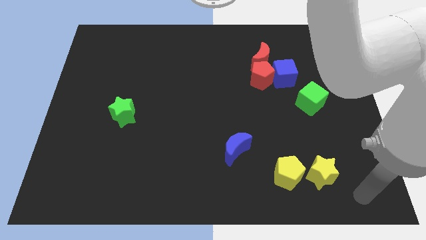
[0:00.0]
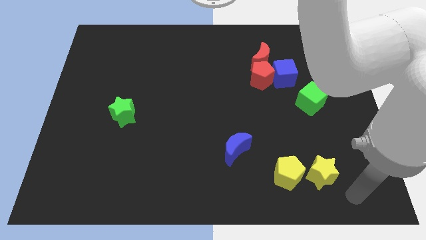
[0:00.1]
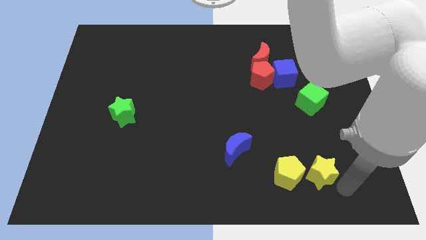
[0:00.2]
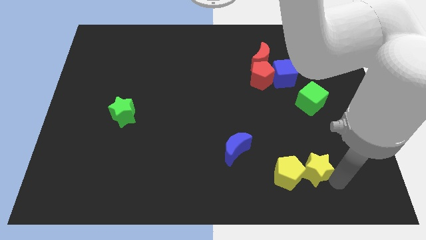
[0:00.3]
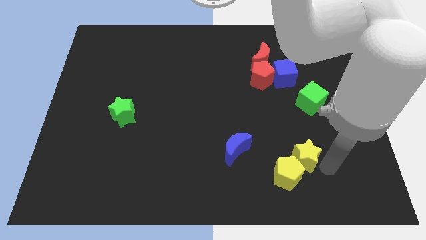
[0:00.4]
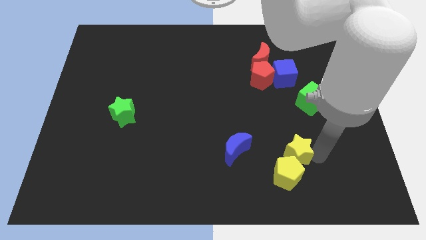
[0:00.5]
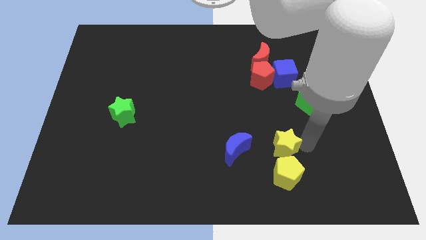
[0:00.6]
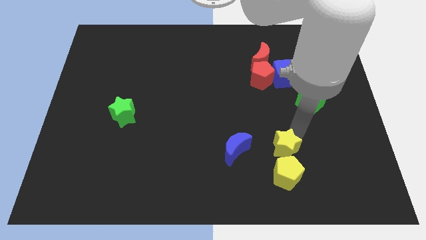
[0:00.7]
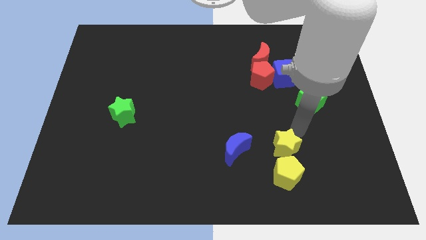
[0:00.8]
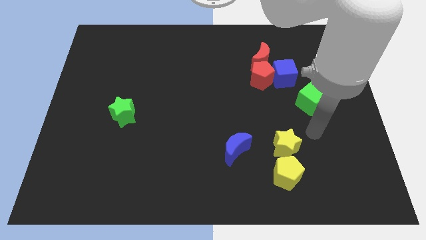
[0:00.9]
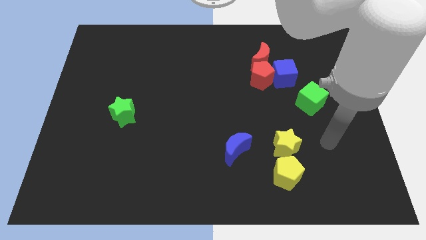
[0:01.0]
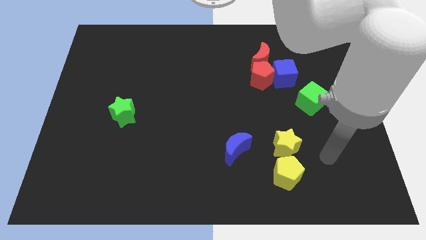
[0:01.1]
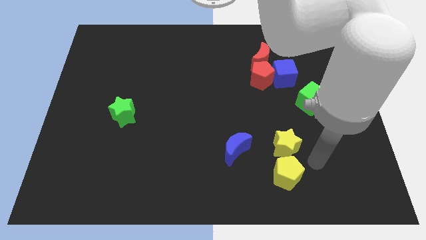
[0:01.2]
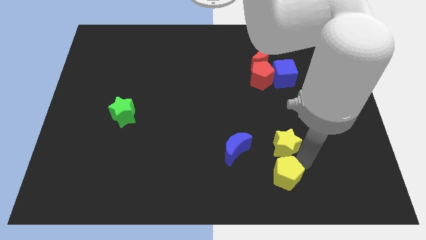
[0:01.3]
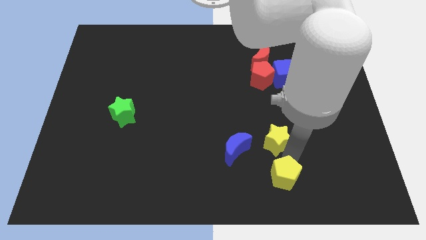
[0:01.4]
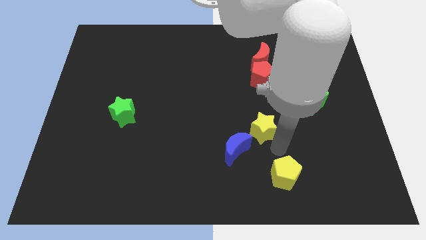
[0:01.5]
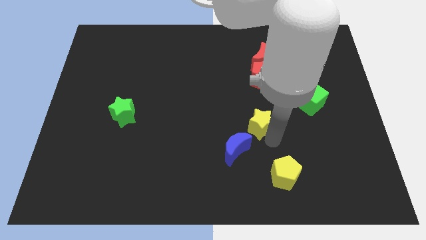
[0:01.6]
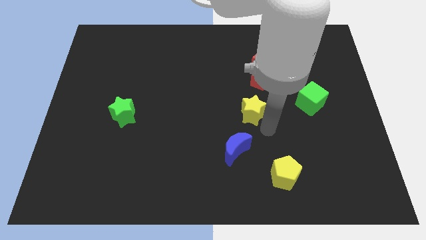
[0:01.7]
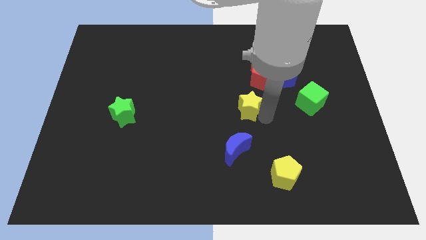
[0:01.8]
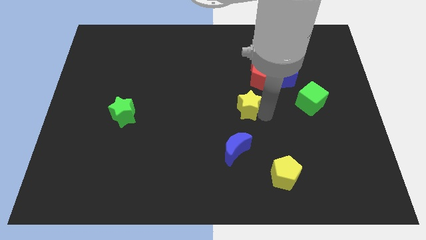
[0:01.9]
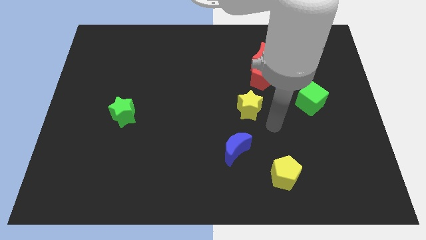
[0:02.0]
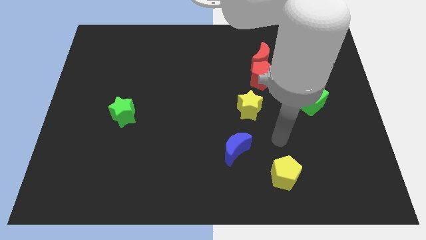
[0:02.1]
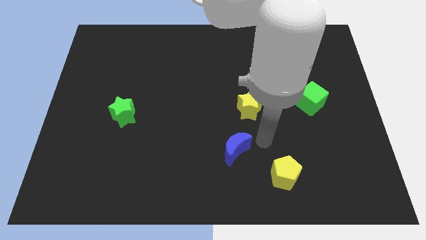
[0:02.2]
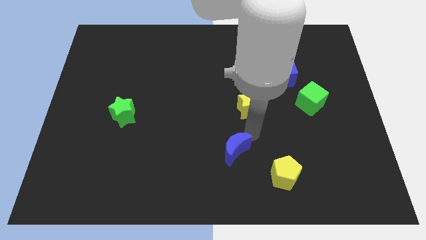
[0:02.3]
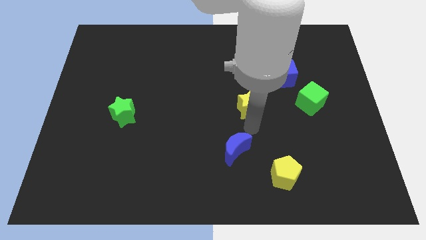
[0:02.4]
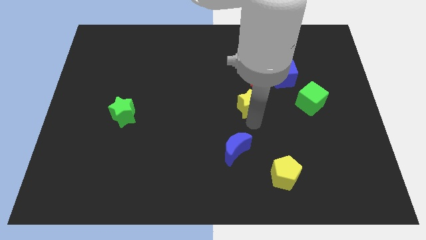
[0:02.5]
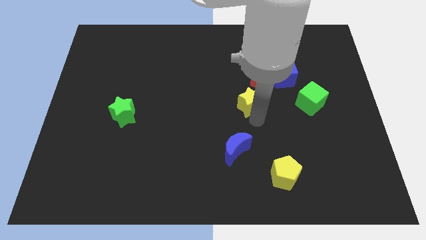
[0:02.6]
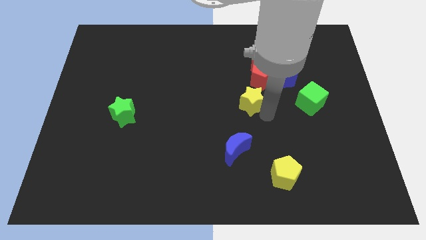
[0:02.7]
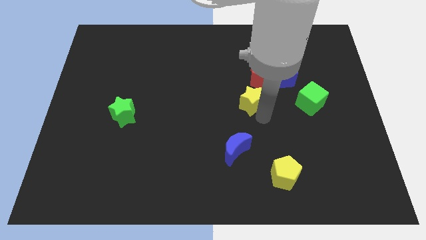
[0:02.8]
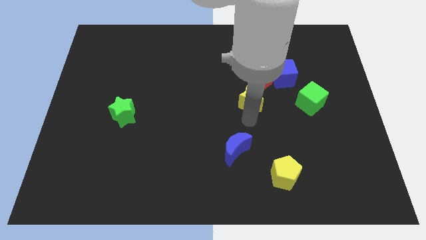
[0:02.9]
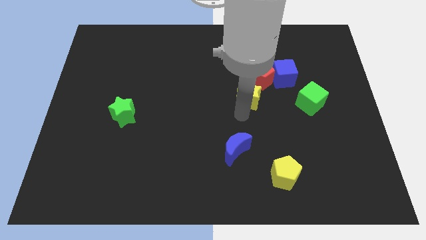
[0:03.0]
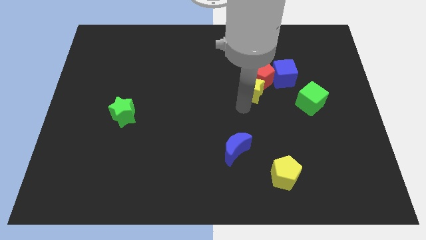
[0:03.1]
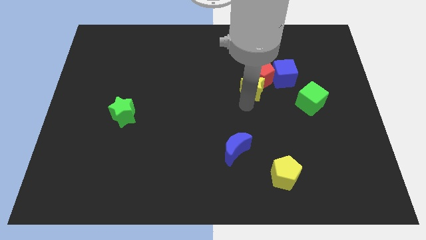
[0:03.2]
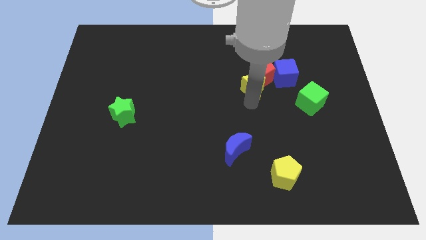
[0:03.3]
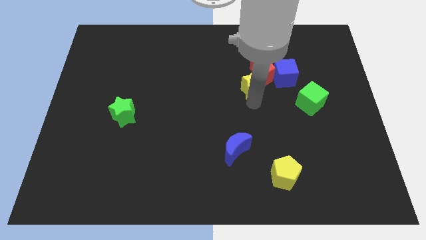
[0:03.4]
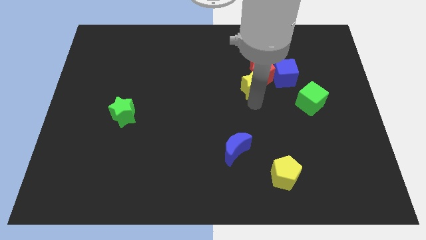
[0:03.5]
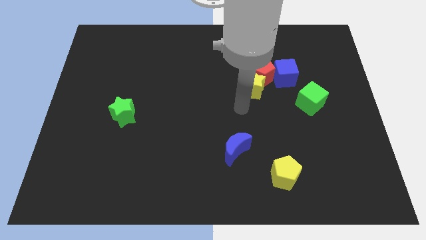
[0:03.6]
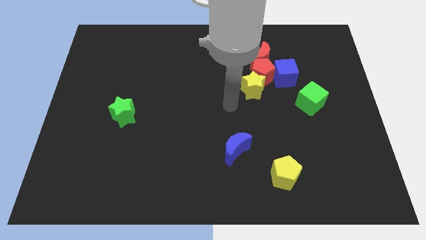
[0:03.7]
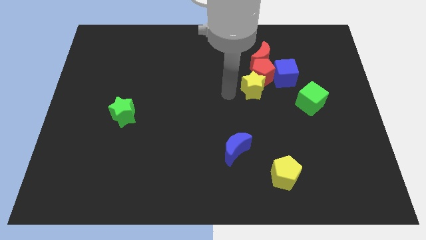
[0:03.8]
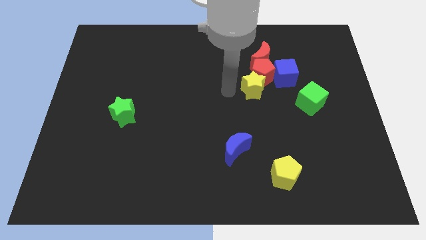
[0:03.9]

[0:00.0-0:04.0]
push the yellow star into the bottom left of red pentagon

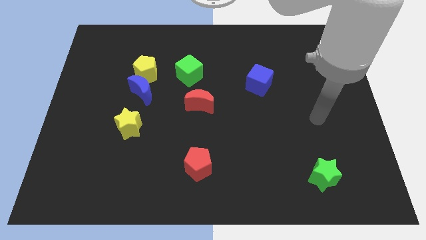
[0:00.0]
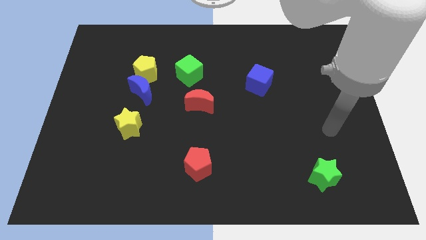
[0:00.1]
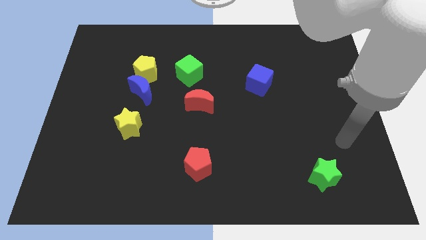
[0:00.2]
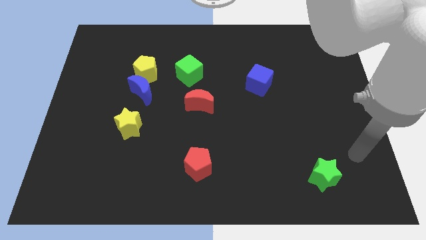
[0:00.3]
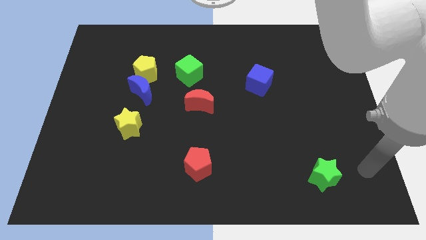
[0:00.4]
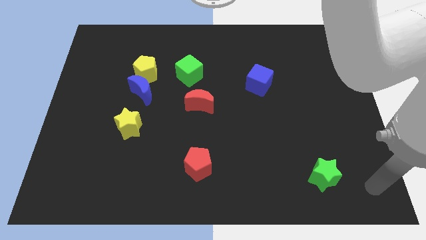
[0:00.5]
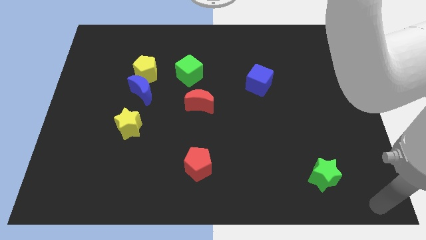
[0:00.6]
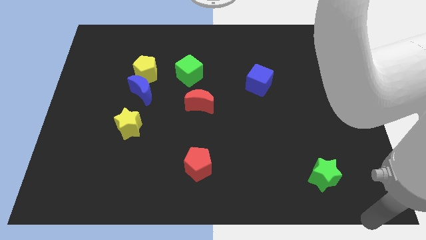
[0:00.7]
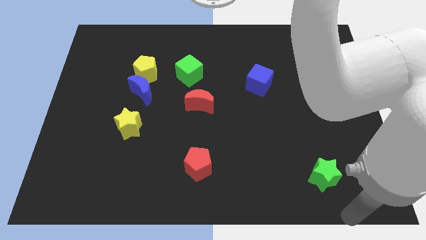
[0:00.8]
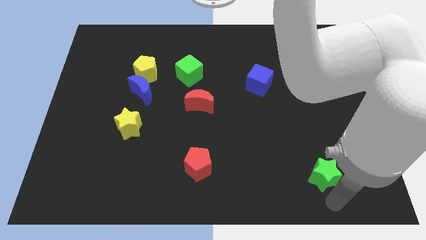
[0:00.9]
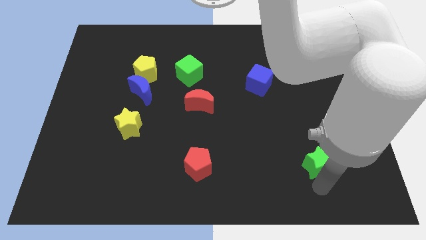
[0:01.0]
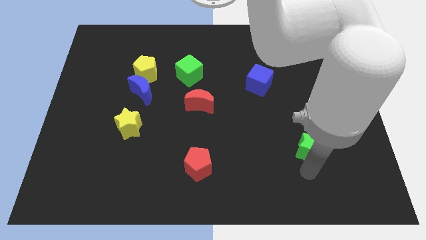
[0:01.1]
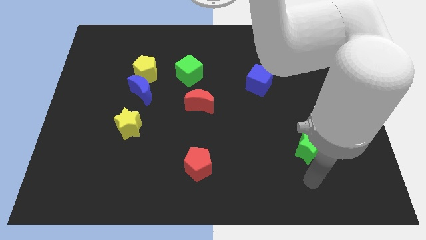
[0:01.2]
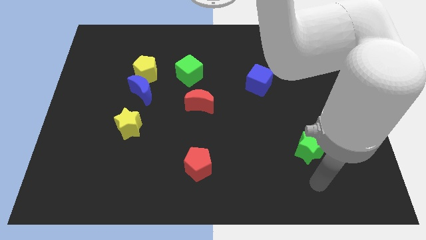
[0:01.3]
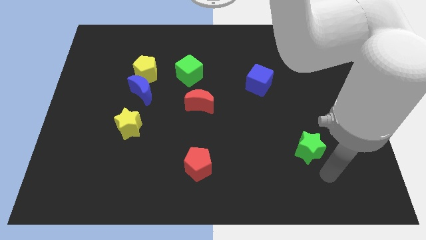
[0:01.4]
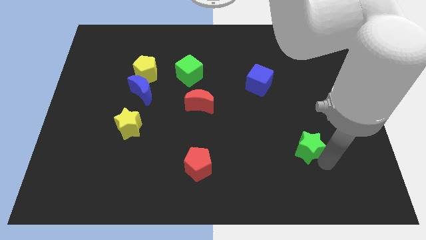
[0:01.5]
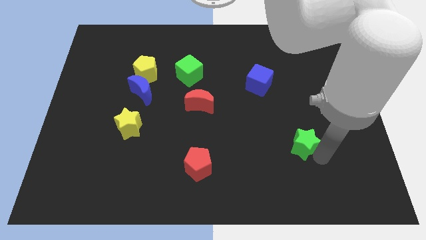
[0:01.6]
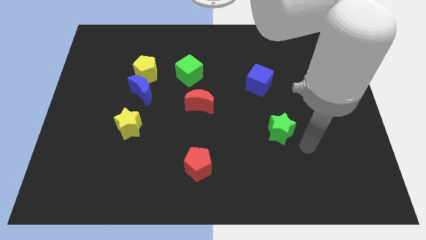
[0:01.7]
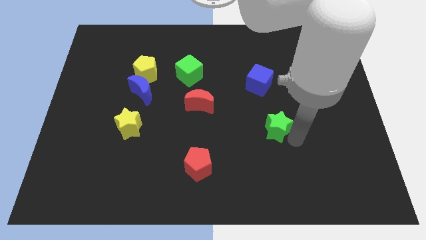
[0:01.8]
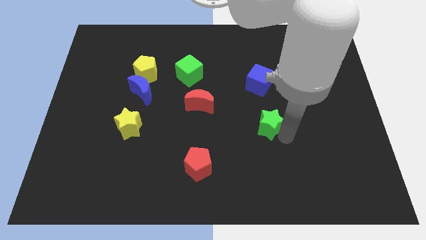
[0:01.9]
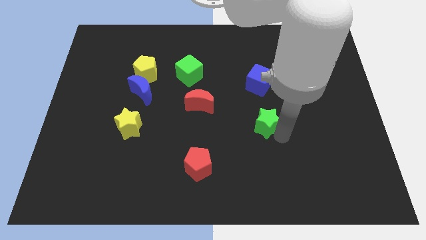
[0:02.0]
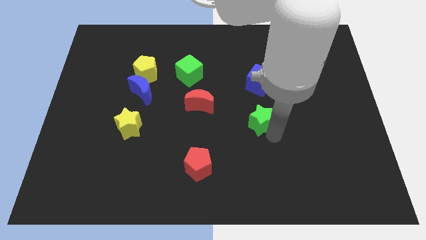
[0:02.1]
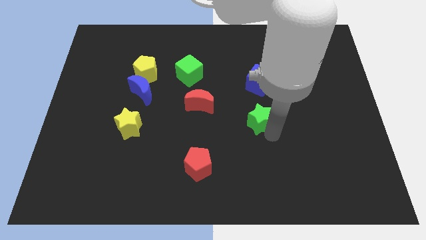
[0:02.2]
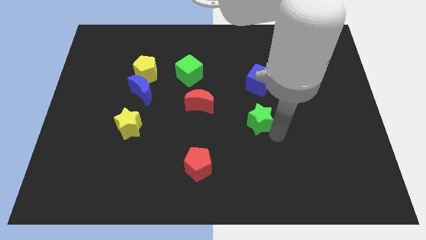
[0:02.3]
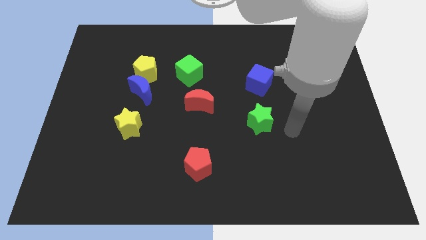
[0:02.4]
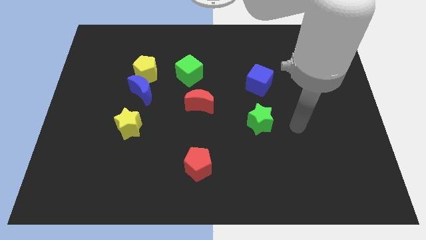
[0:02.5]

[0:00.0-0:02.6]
move the green star to the bottom of the blue cube

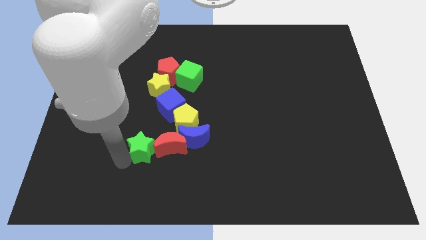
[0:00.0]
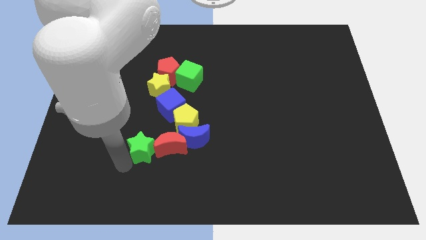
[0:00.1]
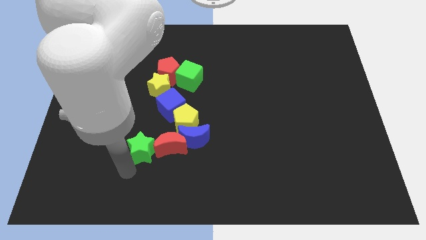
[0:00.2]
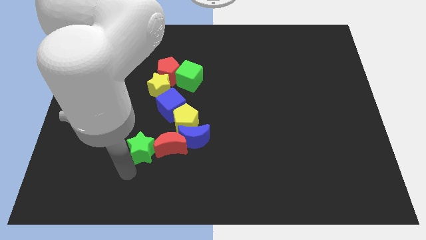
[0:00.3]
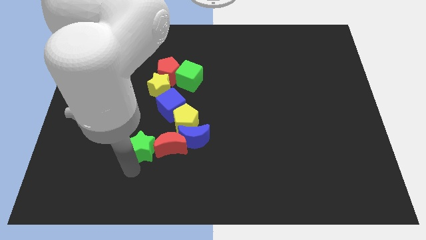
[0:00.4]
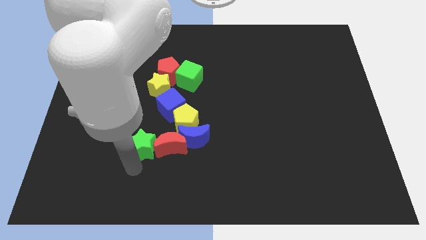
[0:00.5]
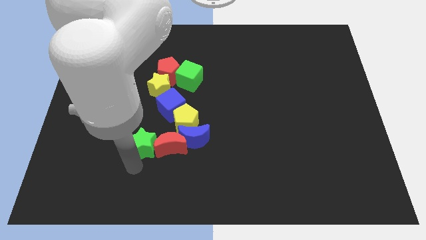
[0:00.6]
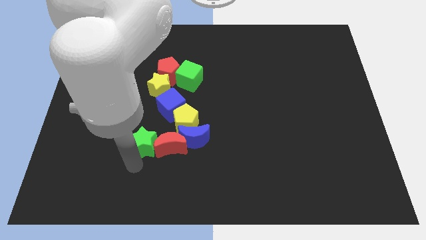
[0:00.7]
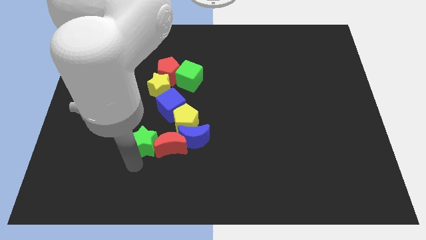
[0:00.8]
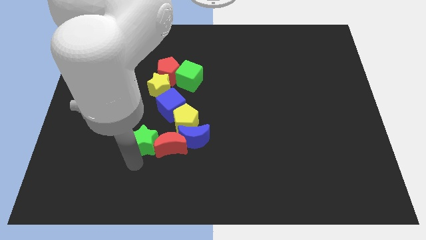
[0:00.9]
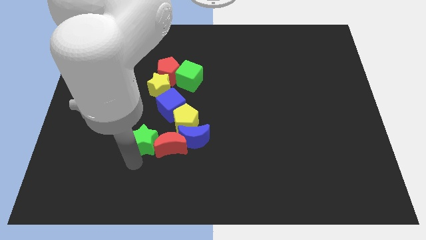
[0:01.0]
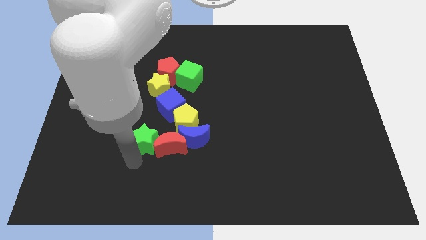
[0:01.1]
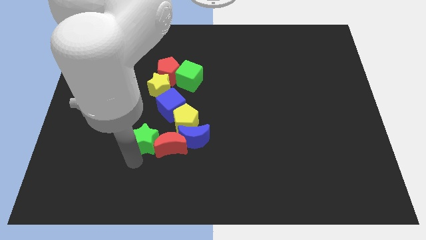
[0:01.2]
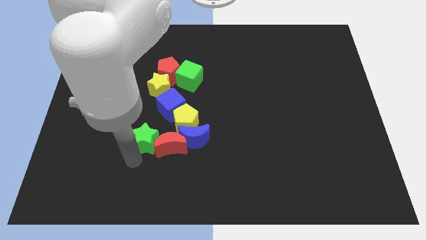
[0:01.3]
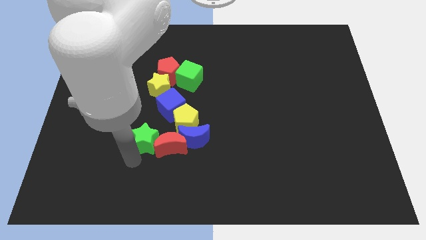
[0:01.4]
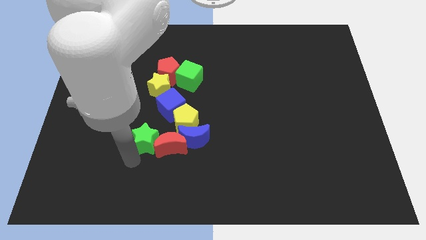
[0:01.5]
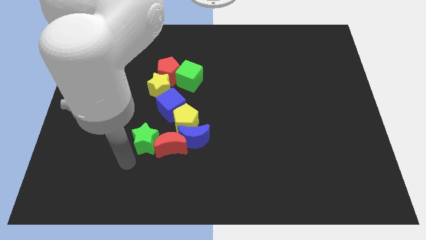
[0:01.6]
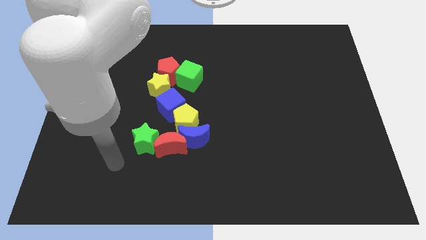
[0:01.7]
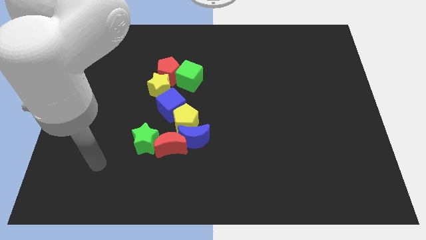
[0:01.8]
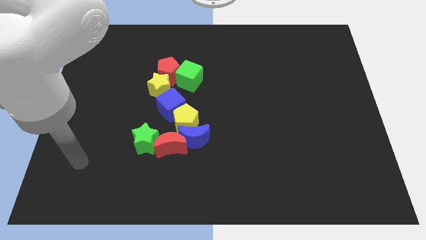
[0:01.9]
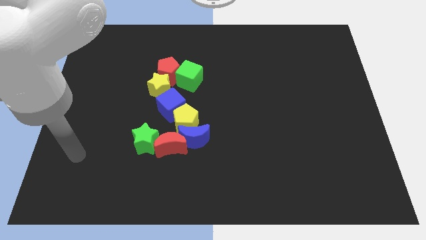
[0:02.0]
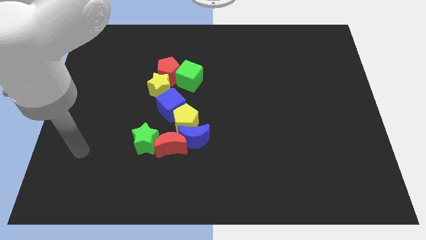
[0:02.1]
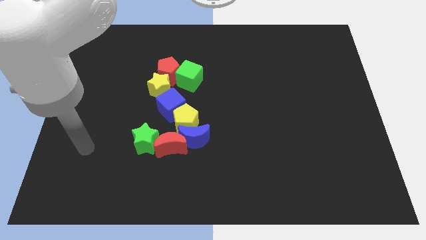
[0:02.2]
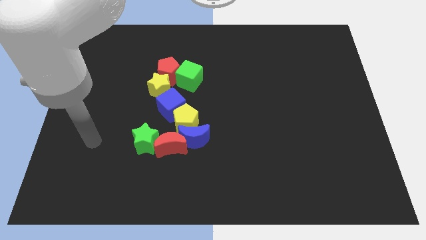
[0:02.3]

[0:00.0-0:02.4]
move your arm away from green star
